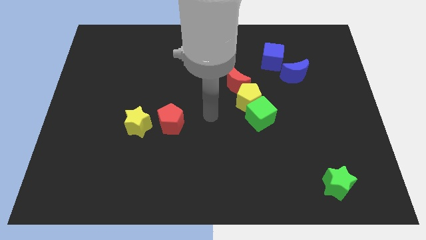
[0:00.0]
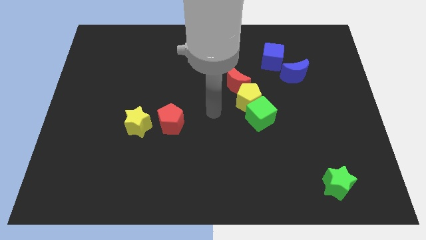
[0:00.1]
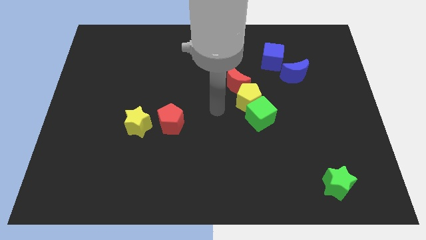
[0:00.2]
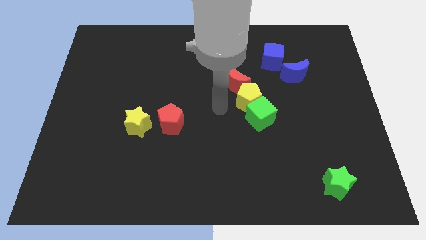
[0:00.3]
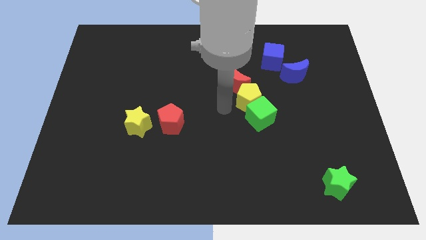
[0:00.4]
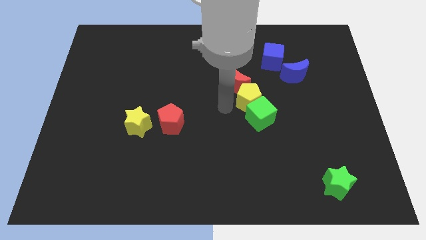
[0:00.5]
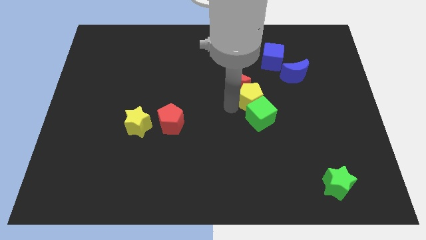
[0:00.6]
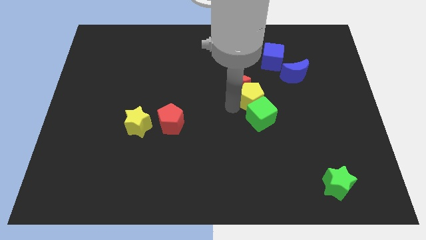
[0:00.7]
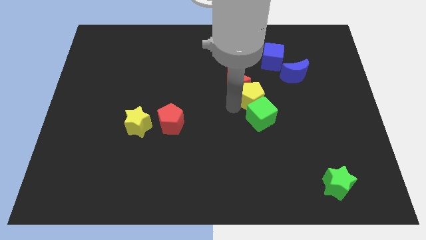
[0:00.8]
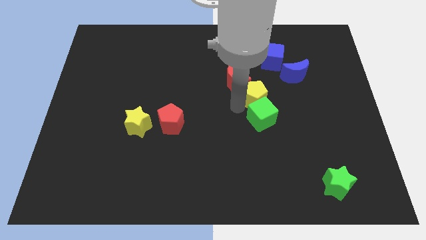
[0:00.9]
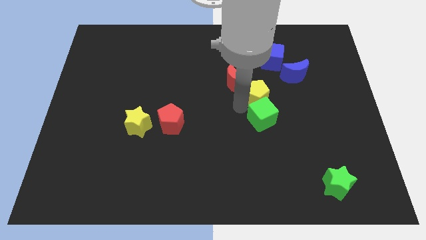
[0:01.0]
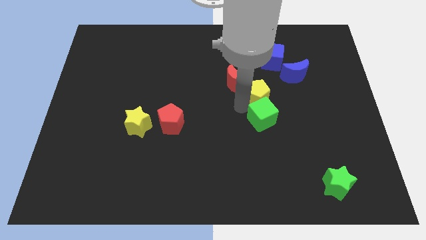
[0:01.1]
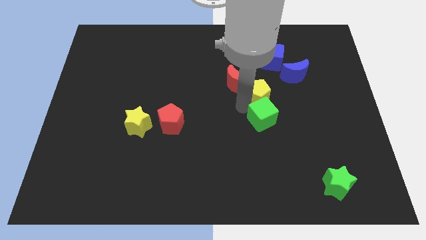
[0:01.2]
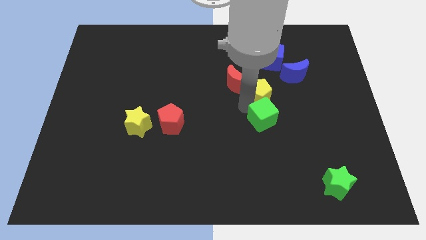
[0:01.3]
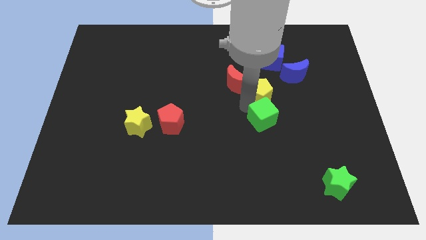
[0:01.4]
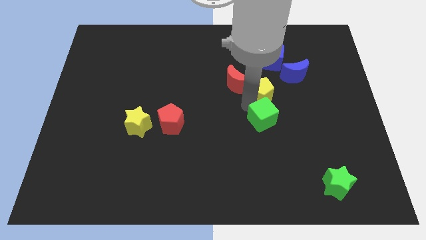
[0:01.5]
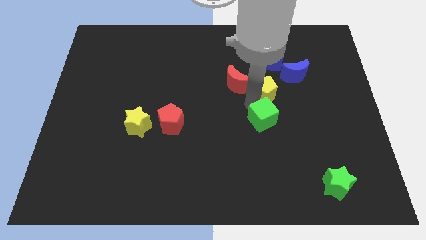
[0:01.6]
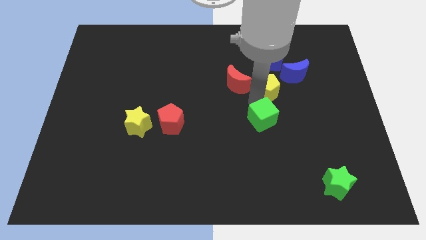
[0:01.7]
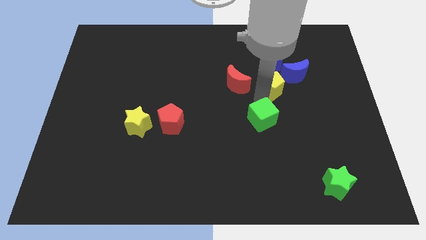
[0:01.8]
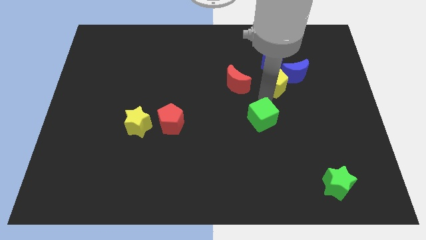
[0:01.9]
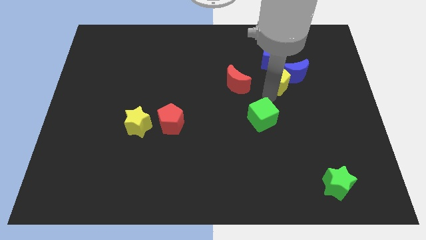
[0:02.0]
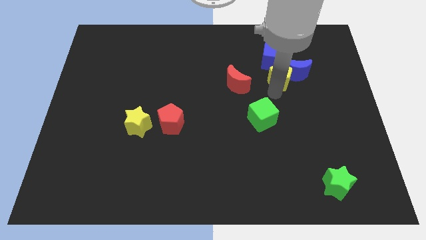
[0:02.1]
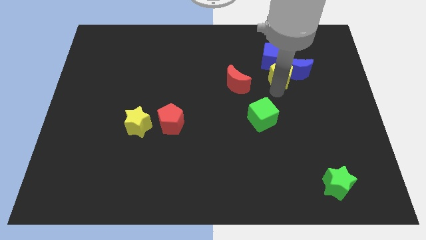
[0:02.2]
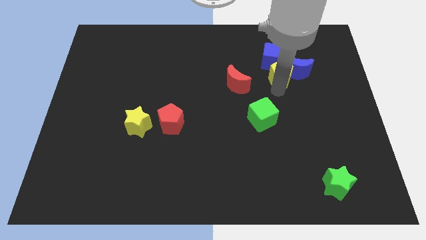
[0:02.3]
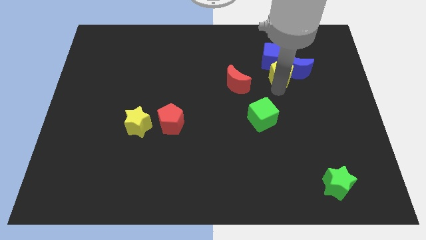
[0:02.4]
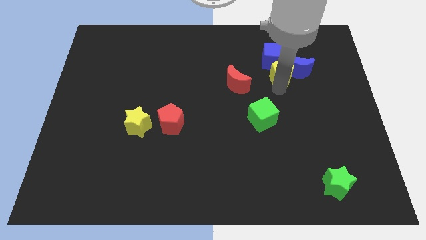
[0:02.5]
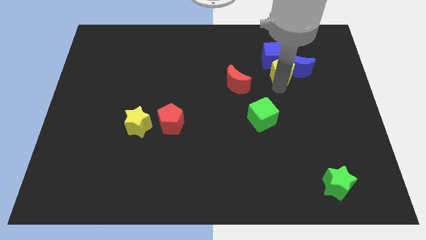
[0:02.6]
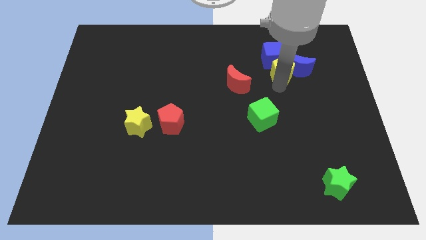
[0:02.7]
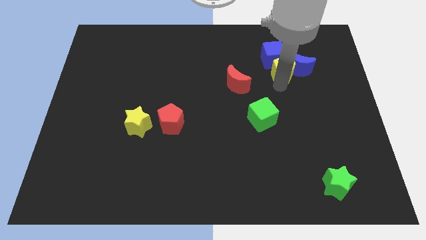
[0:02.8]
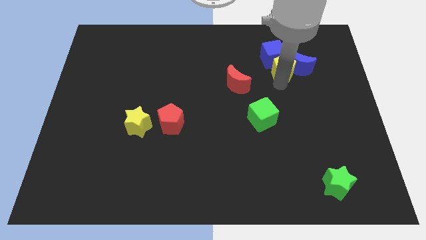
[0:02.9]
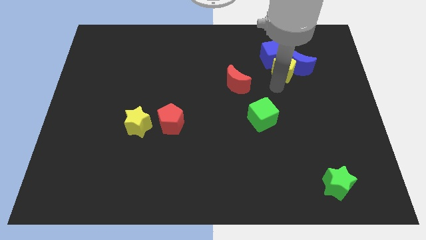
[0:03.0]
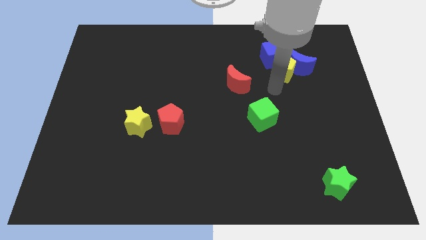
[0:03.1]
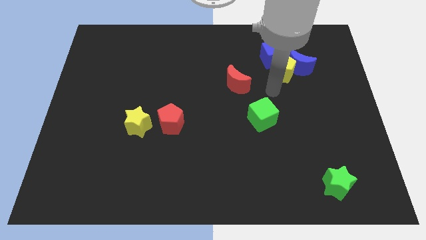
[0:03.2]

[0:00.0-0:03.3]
separate yellow pentagon from the group of blocks

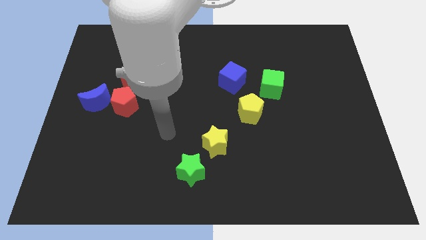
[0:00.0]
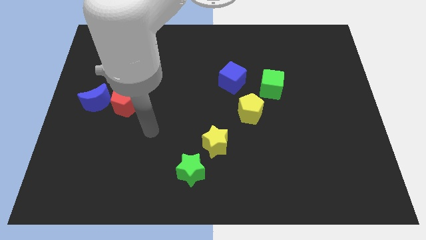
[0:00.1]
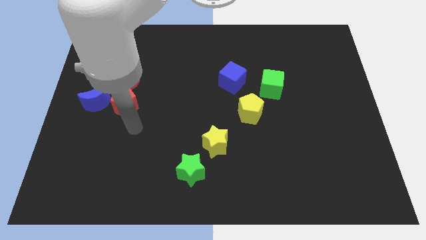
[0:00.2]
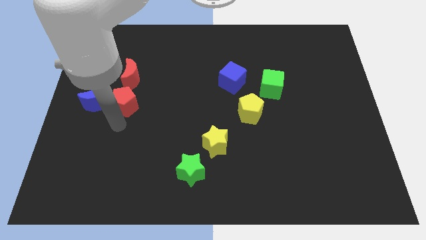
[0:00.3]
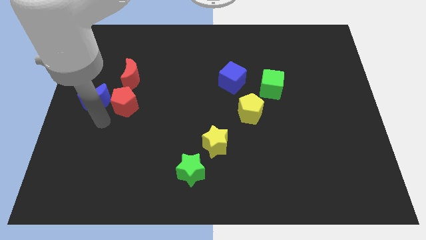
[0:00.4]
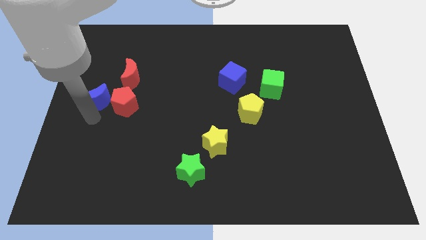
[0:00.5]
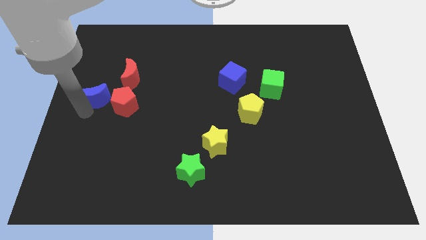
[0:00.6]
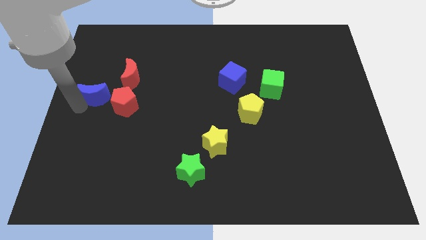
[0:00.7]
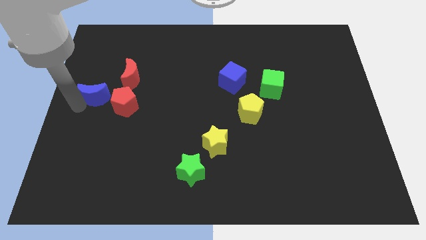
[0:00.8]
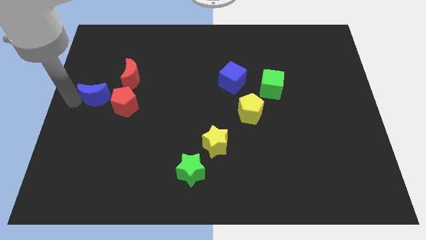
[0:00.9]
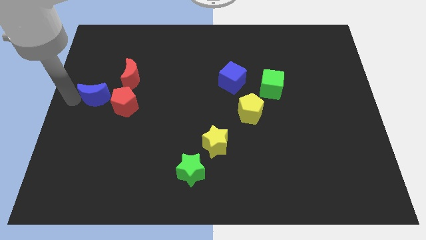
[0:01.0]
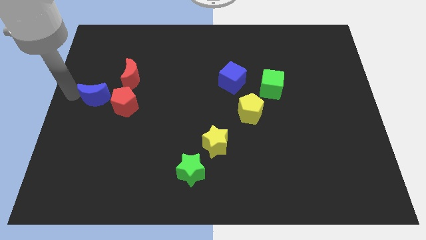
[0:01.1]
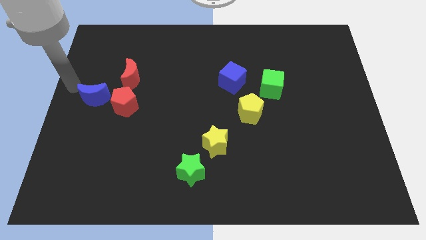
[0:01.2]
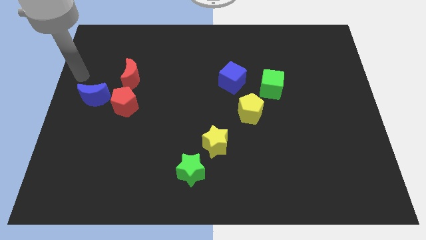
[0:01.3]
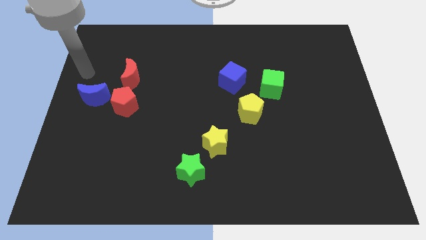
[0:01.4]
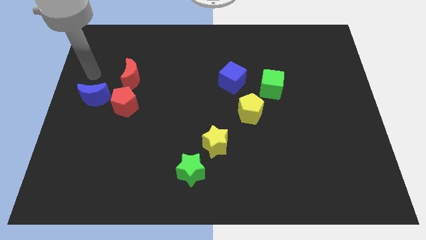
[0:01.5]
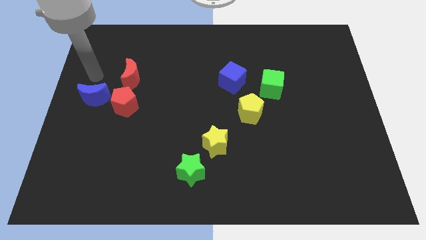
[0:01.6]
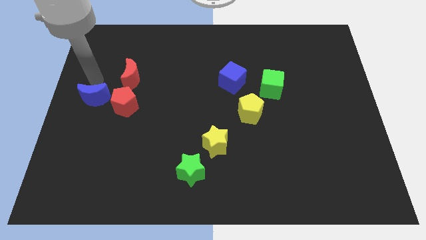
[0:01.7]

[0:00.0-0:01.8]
slightly push blue moon with your arm

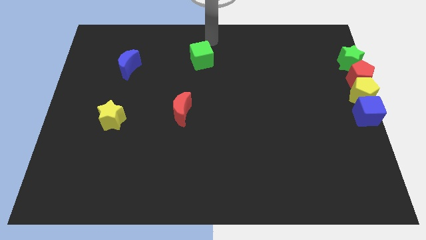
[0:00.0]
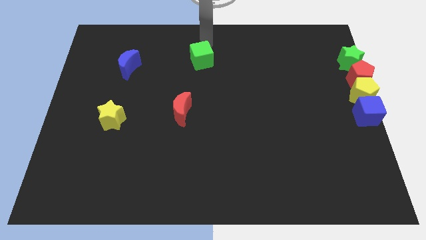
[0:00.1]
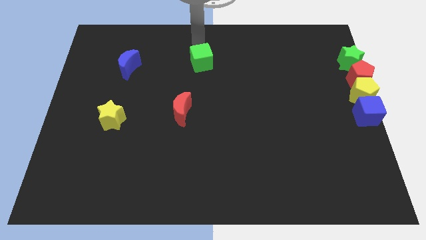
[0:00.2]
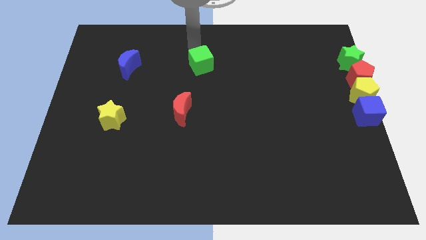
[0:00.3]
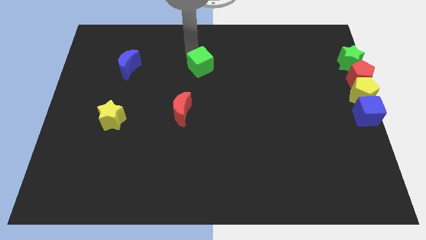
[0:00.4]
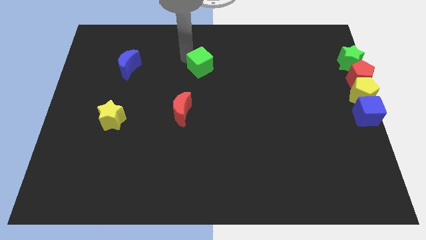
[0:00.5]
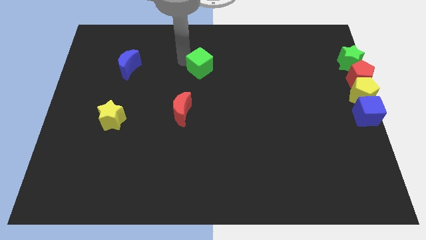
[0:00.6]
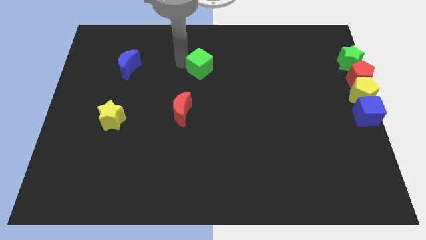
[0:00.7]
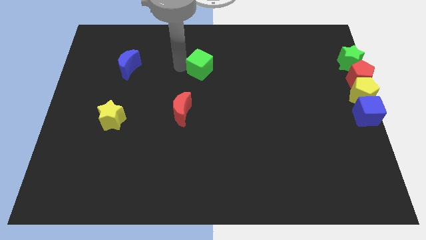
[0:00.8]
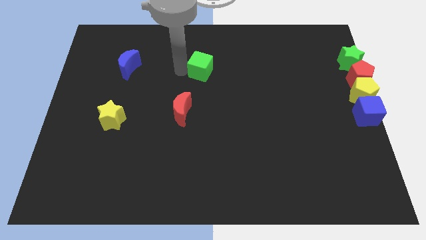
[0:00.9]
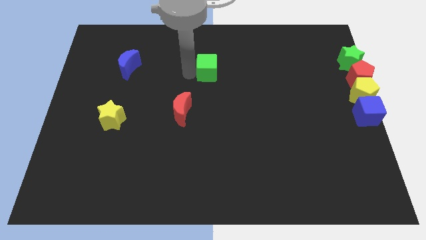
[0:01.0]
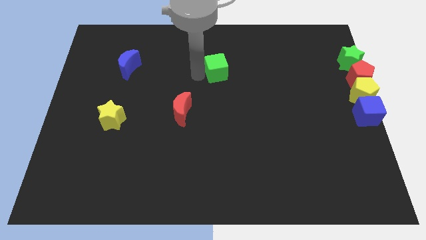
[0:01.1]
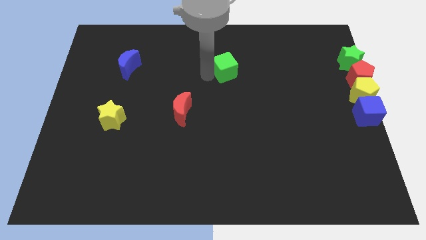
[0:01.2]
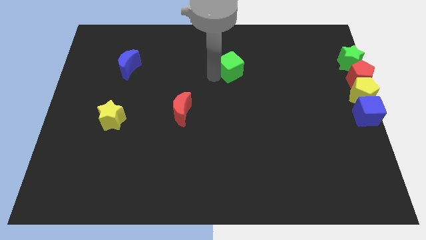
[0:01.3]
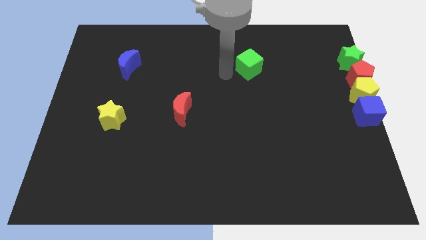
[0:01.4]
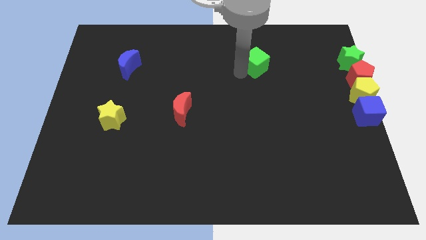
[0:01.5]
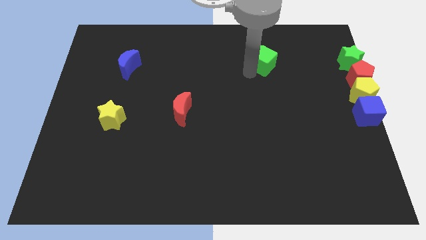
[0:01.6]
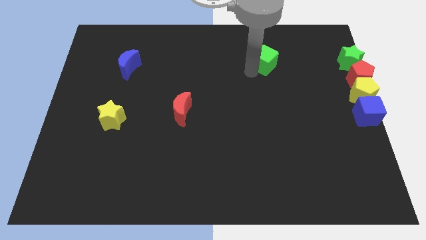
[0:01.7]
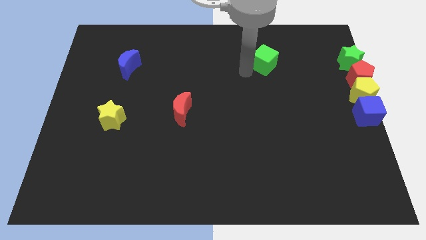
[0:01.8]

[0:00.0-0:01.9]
place the green cube to the left of the green star

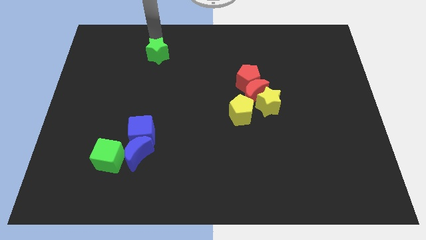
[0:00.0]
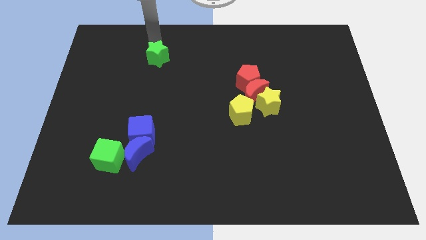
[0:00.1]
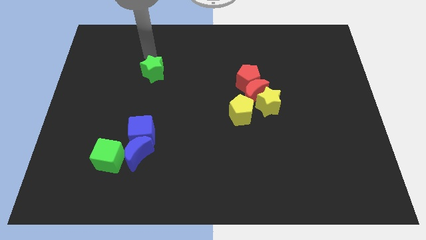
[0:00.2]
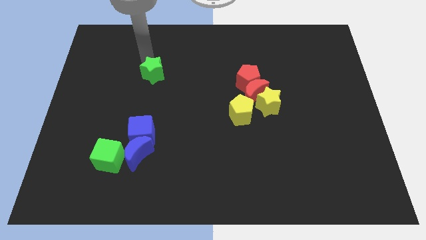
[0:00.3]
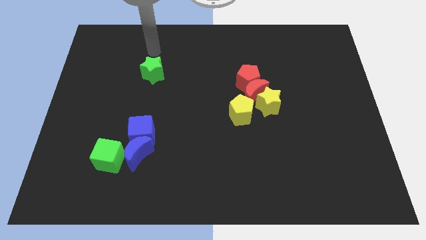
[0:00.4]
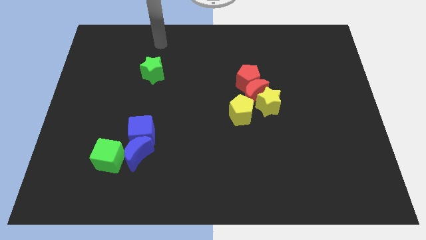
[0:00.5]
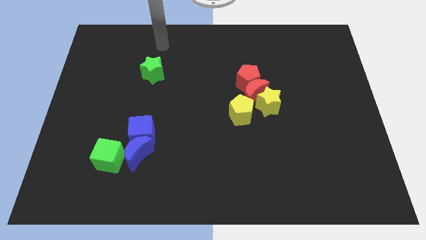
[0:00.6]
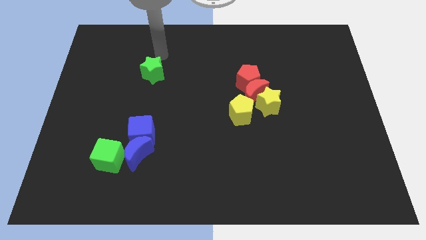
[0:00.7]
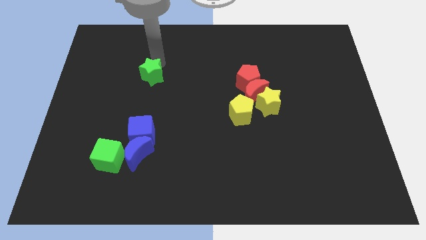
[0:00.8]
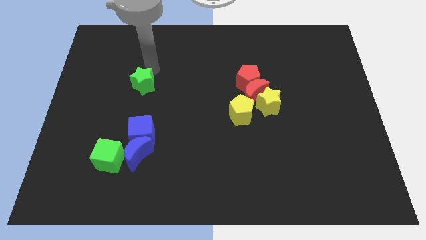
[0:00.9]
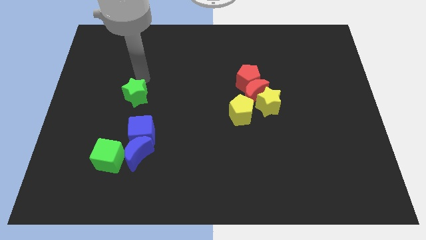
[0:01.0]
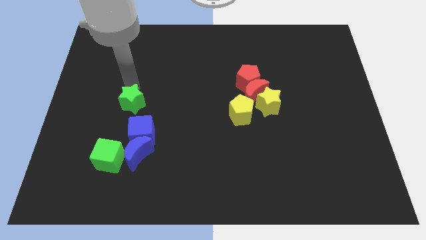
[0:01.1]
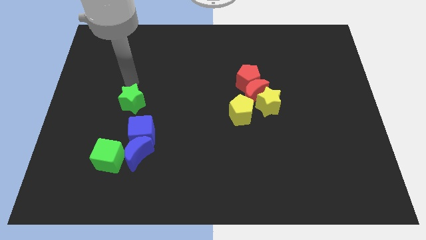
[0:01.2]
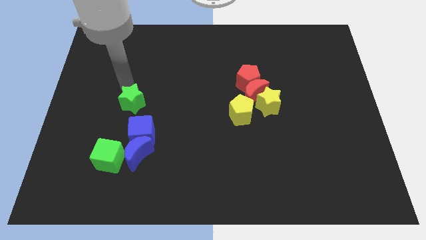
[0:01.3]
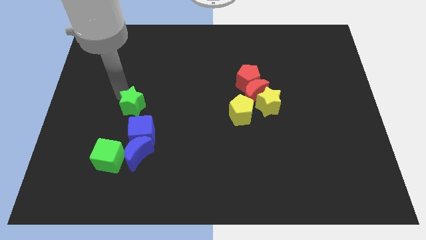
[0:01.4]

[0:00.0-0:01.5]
place the green star above the blue moon

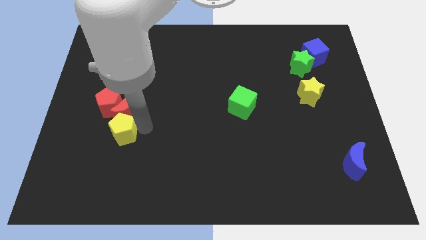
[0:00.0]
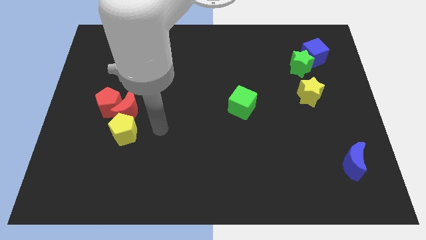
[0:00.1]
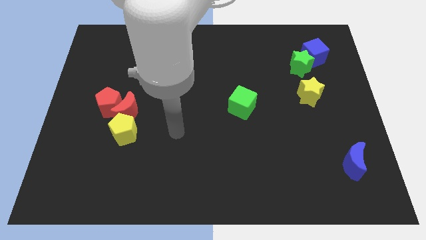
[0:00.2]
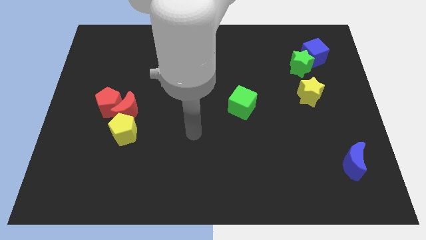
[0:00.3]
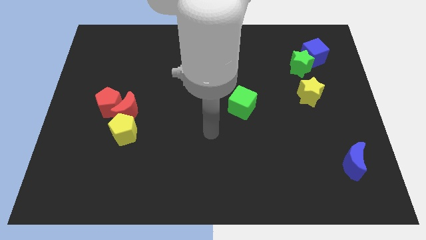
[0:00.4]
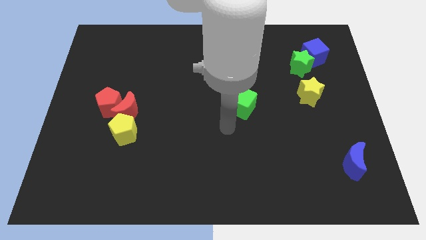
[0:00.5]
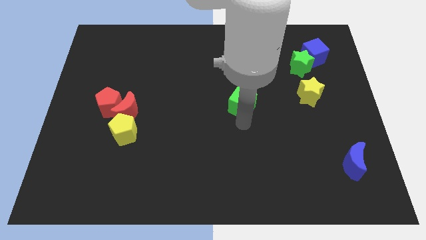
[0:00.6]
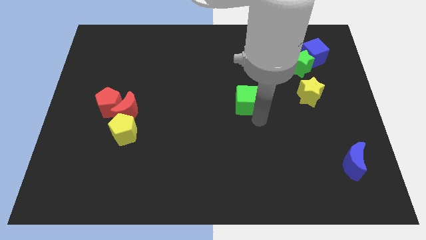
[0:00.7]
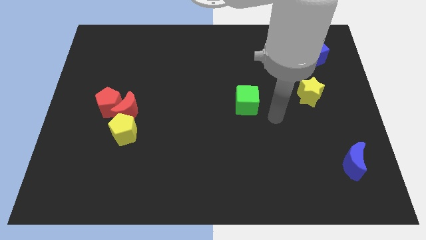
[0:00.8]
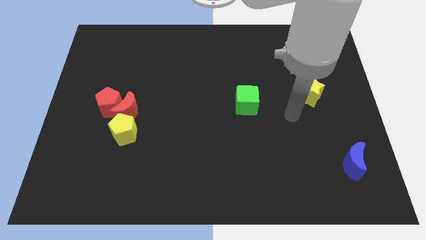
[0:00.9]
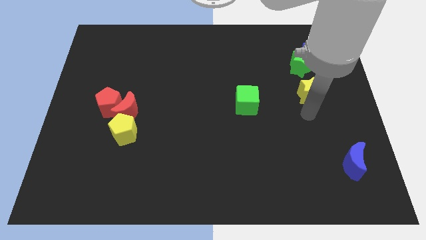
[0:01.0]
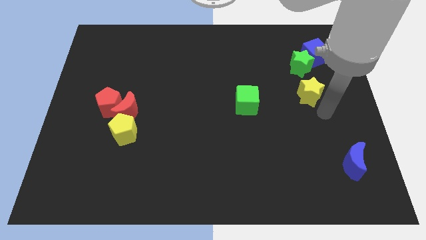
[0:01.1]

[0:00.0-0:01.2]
move your arm to the bottom of the yellow star
